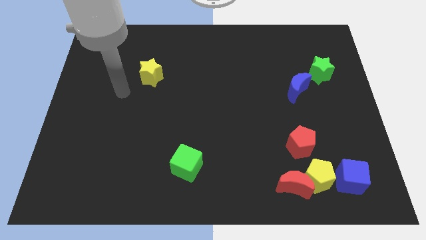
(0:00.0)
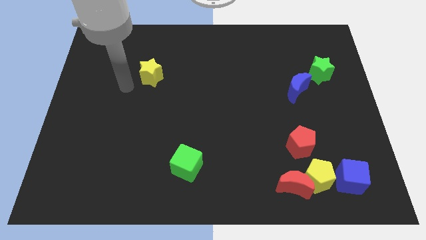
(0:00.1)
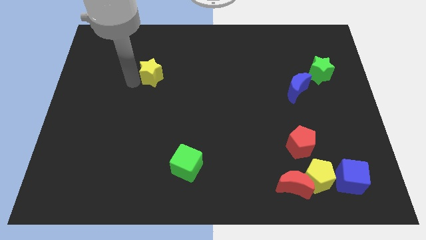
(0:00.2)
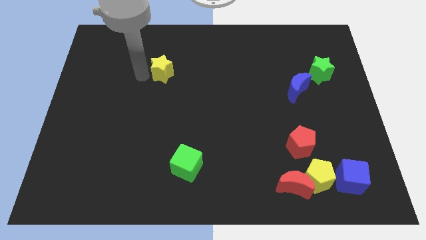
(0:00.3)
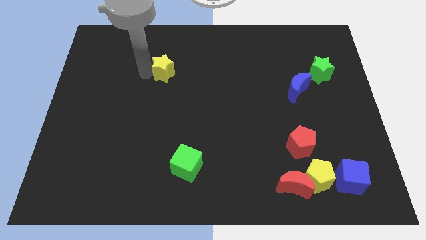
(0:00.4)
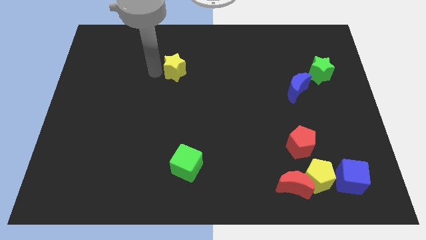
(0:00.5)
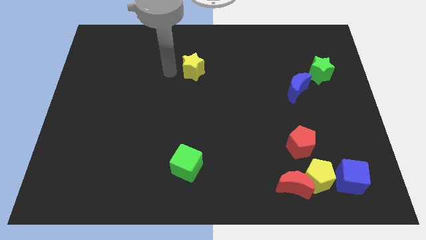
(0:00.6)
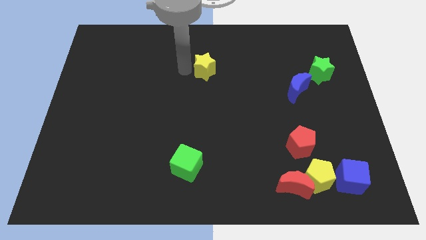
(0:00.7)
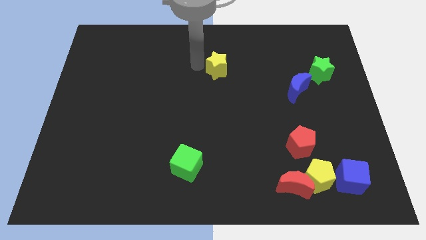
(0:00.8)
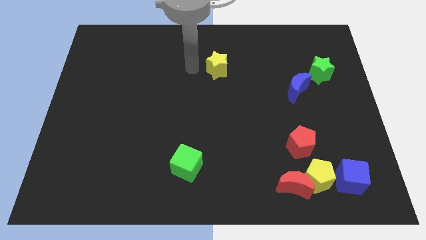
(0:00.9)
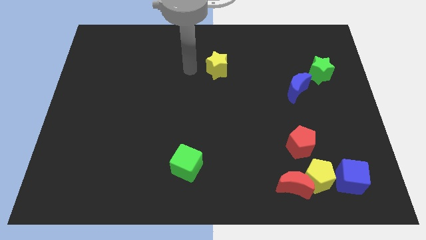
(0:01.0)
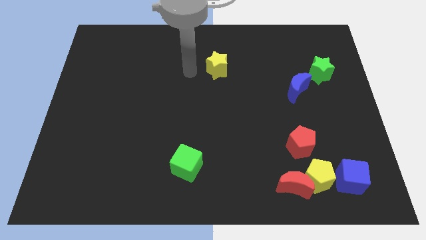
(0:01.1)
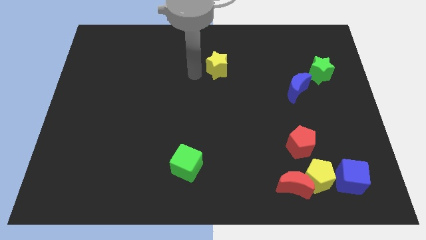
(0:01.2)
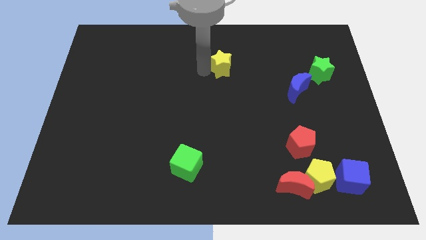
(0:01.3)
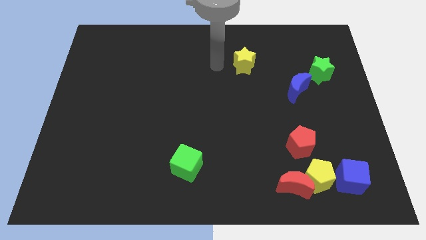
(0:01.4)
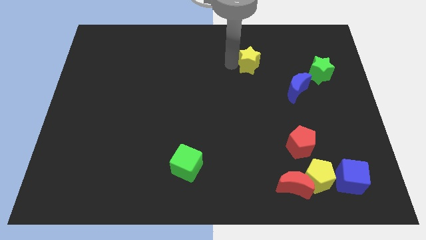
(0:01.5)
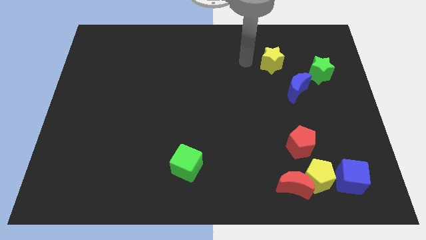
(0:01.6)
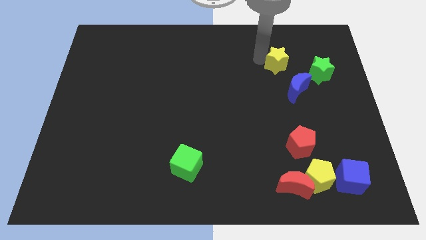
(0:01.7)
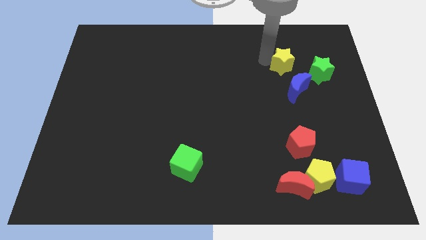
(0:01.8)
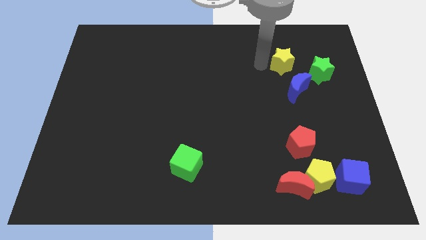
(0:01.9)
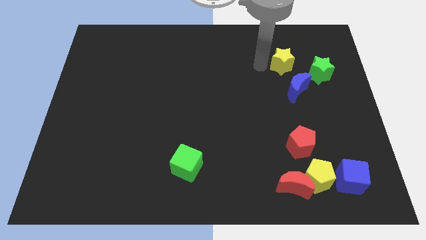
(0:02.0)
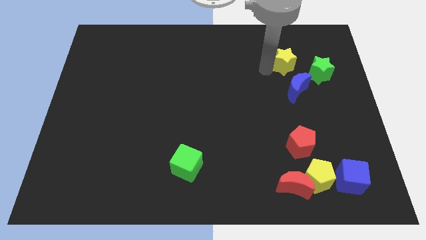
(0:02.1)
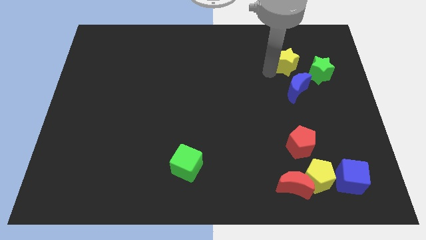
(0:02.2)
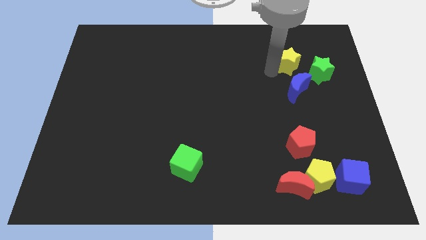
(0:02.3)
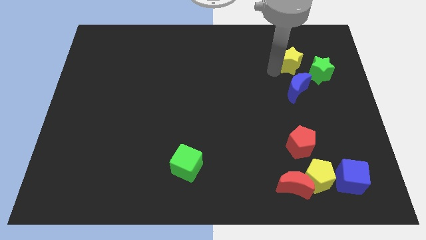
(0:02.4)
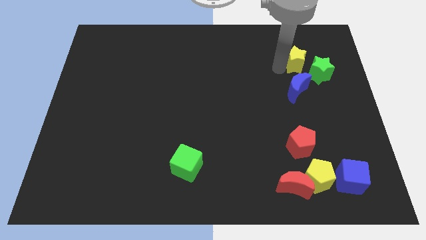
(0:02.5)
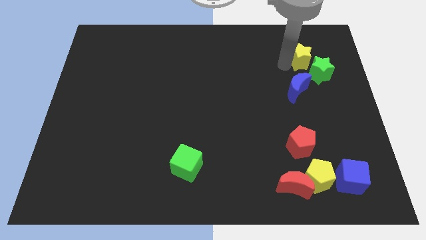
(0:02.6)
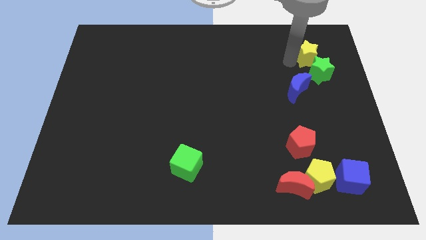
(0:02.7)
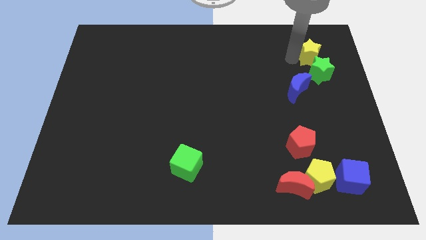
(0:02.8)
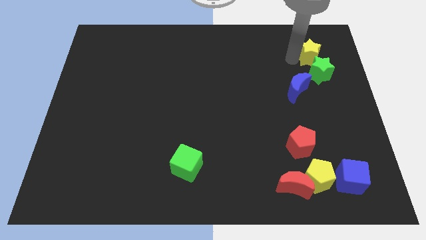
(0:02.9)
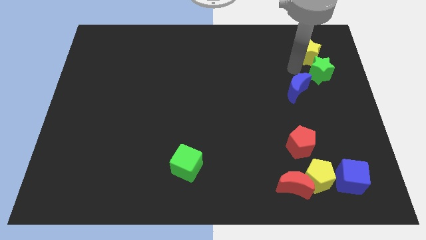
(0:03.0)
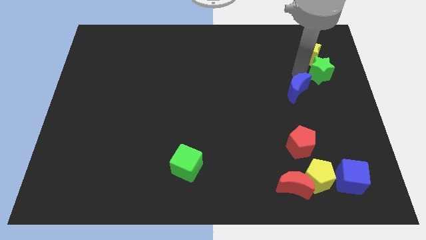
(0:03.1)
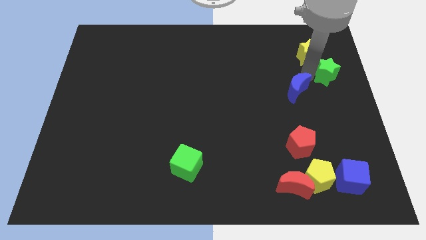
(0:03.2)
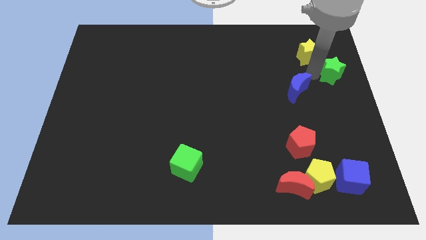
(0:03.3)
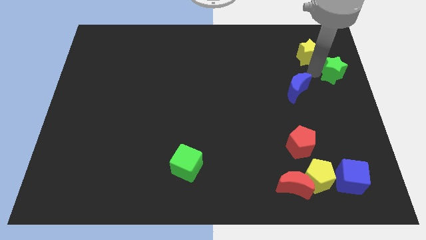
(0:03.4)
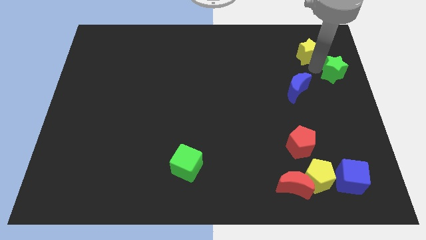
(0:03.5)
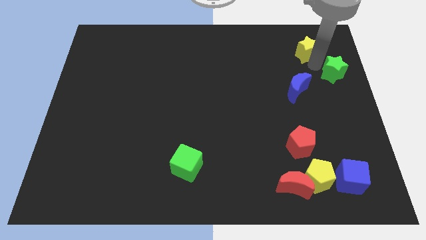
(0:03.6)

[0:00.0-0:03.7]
push the yellow star closer to the green star

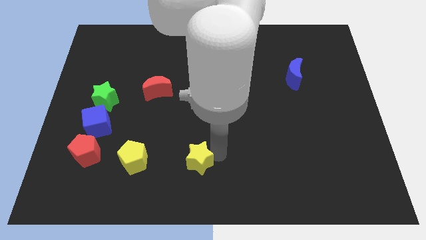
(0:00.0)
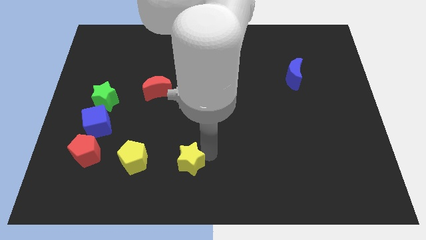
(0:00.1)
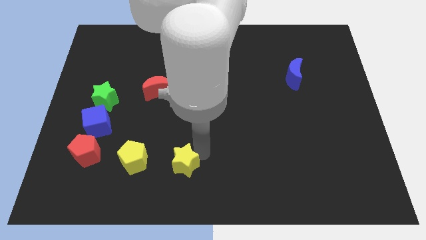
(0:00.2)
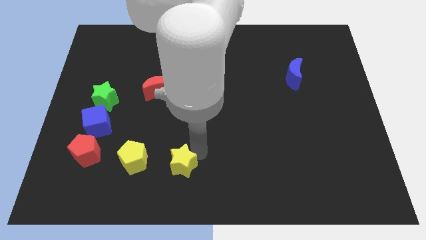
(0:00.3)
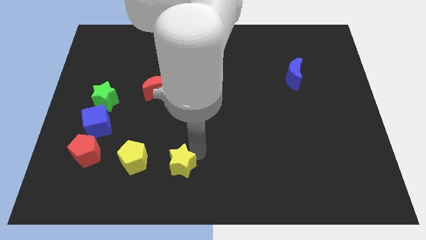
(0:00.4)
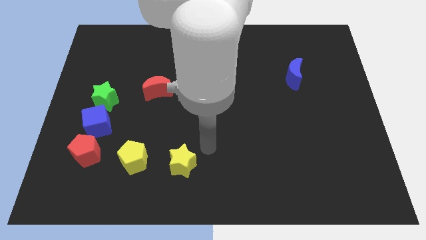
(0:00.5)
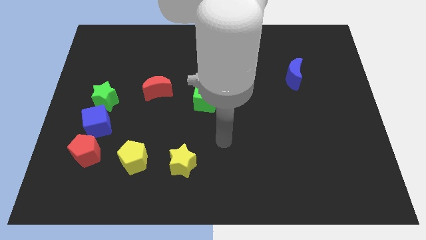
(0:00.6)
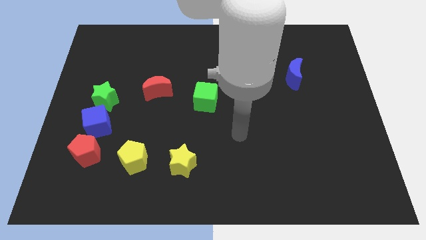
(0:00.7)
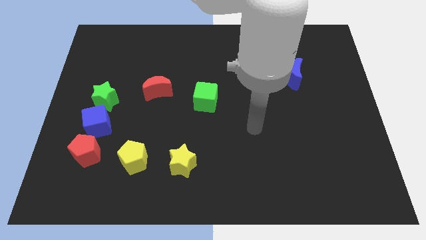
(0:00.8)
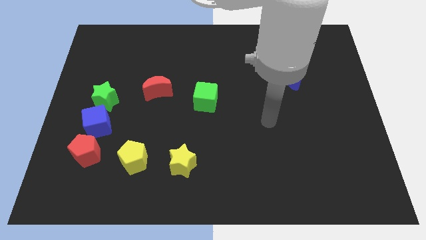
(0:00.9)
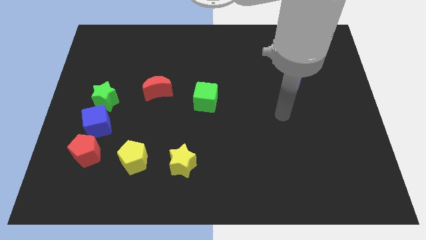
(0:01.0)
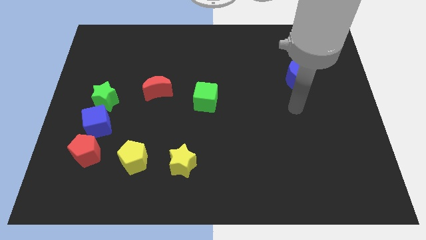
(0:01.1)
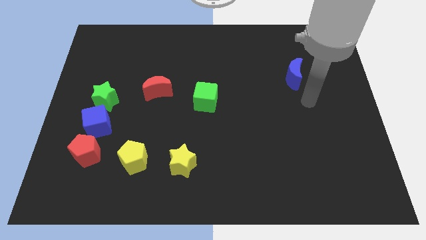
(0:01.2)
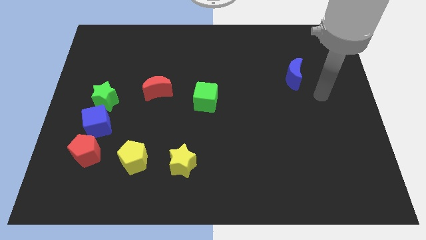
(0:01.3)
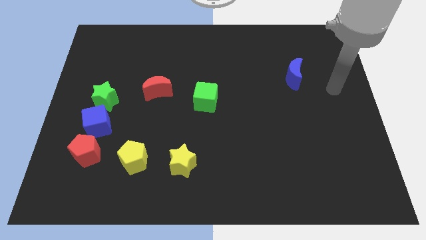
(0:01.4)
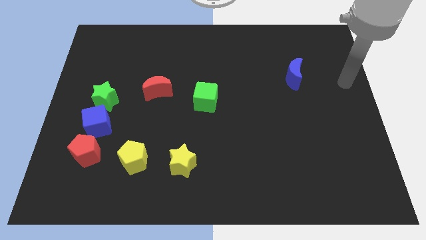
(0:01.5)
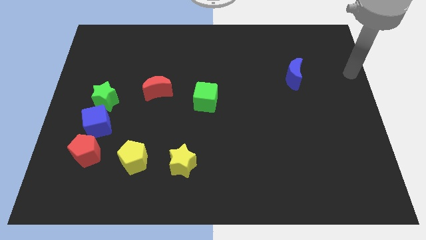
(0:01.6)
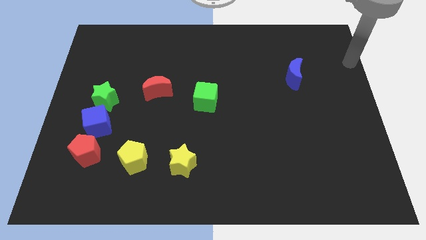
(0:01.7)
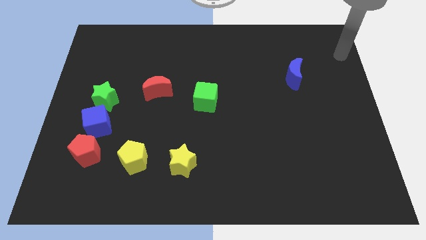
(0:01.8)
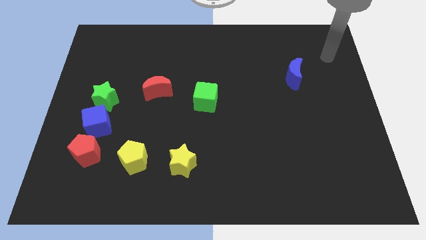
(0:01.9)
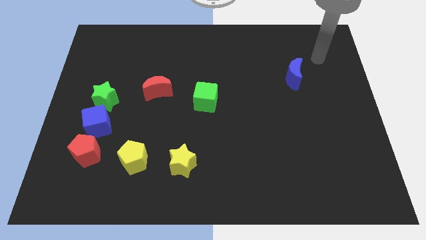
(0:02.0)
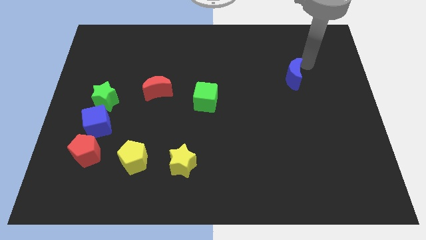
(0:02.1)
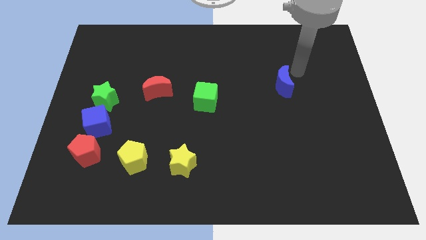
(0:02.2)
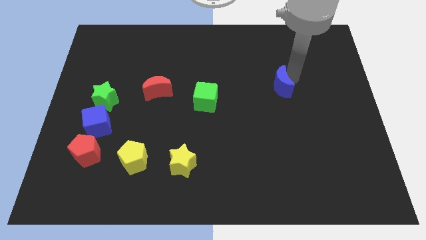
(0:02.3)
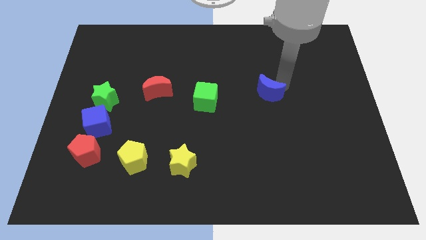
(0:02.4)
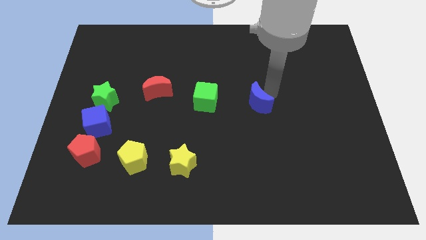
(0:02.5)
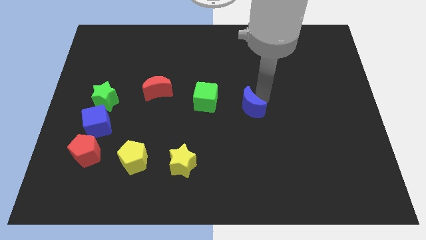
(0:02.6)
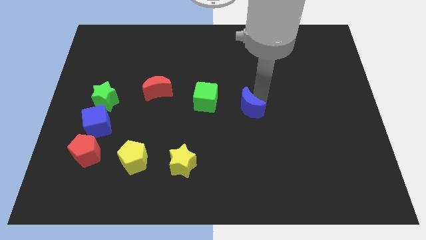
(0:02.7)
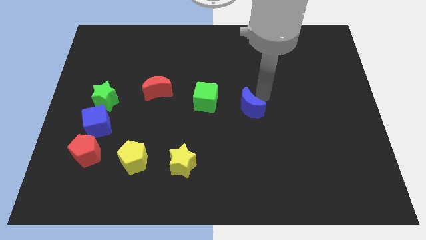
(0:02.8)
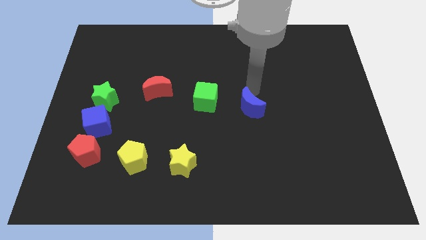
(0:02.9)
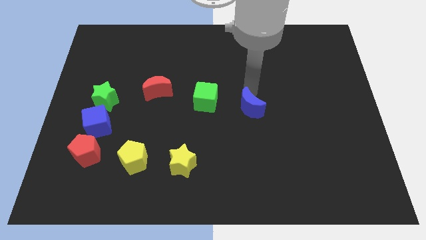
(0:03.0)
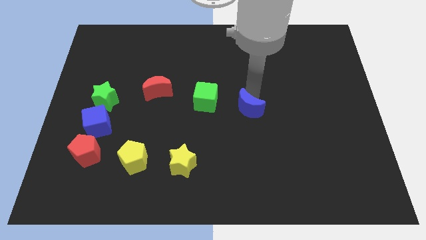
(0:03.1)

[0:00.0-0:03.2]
push the blue moon to the right of green cube

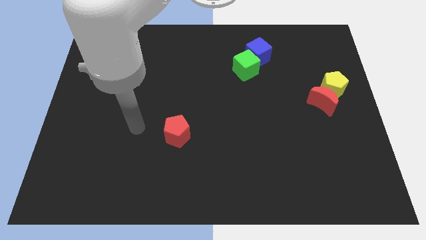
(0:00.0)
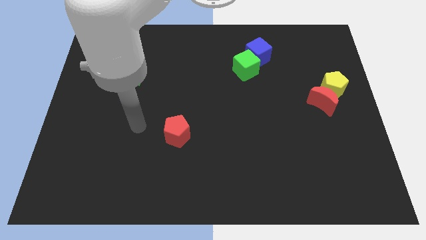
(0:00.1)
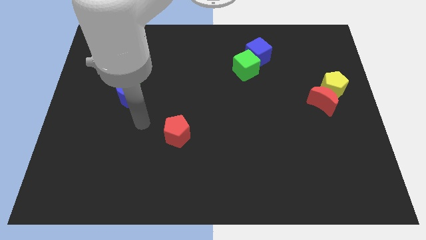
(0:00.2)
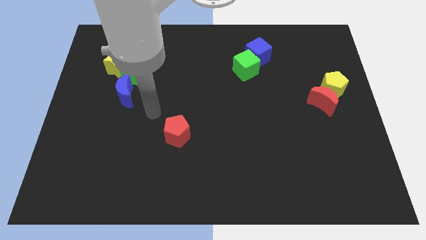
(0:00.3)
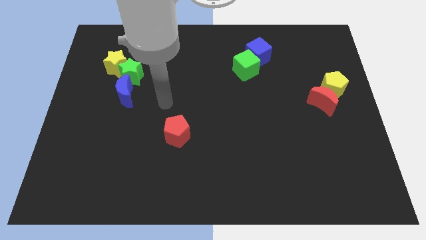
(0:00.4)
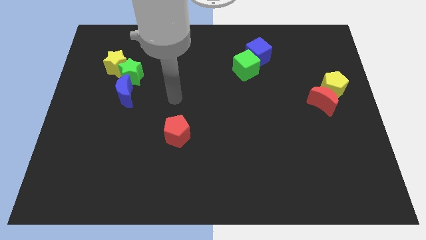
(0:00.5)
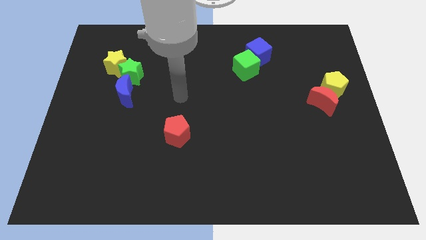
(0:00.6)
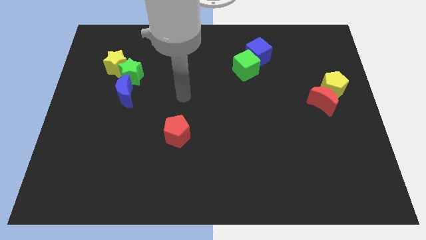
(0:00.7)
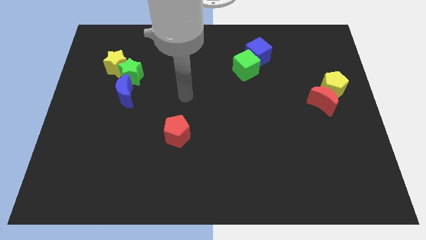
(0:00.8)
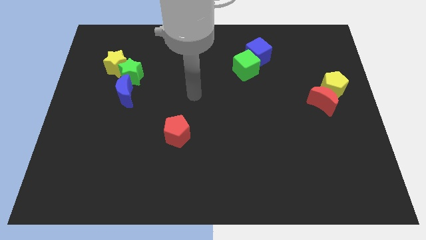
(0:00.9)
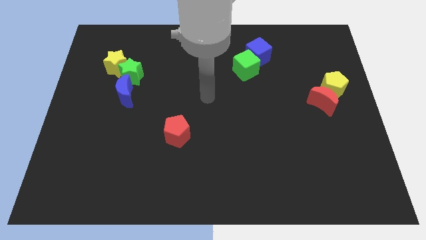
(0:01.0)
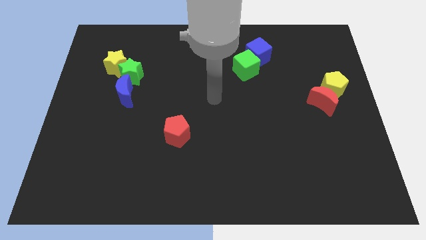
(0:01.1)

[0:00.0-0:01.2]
place the pointer at the center of the board

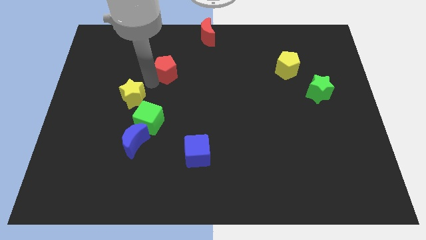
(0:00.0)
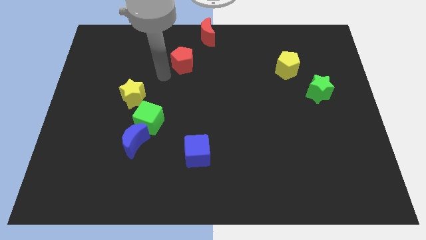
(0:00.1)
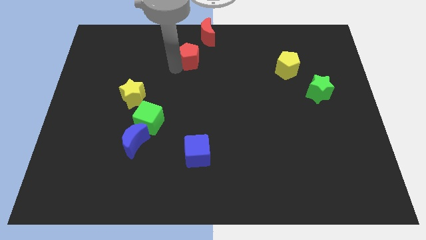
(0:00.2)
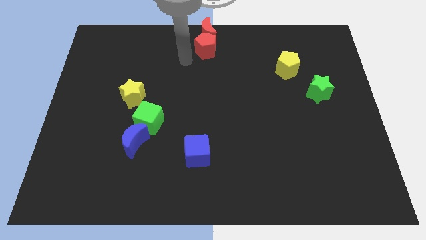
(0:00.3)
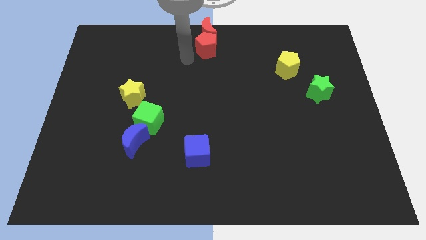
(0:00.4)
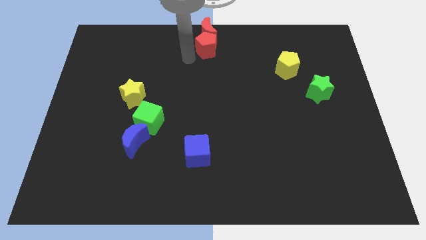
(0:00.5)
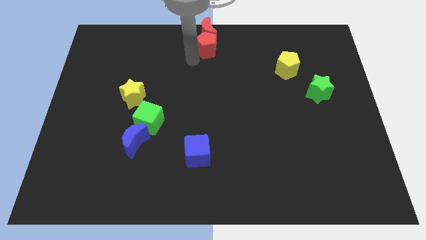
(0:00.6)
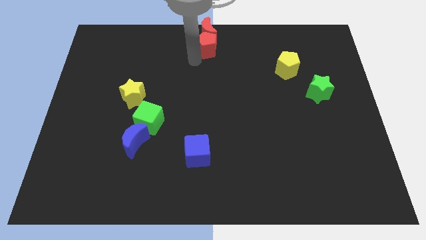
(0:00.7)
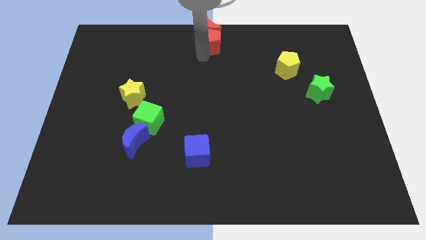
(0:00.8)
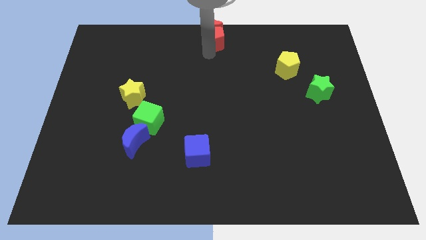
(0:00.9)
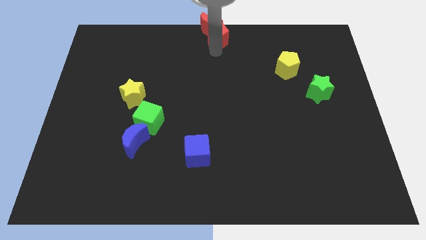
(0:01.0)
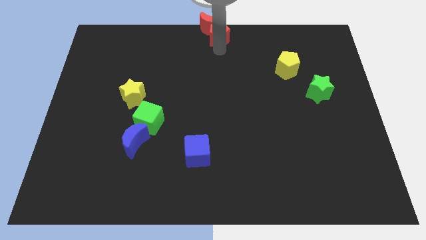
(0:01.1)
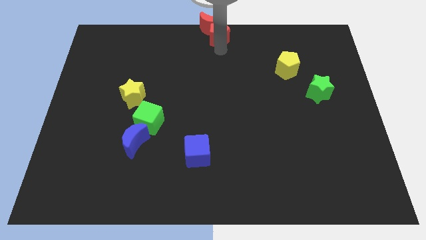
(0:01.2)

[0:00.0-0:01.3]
move red pentagon below the red moon
